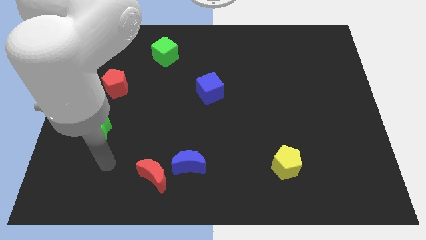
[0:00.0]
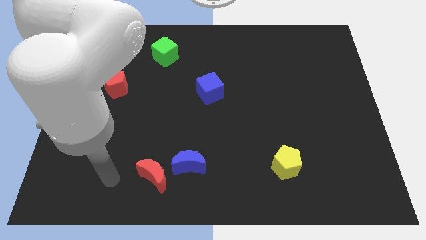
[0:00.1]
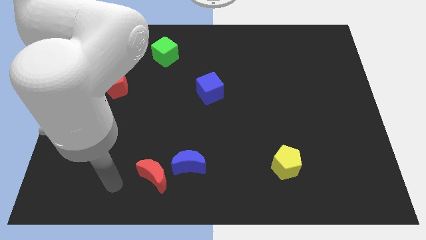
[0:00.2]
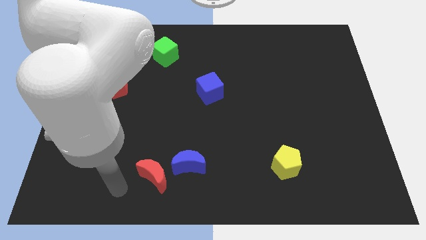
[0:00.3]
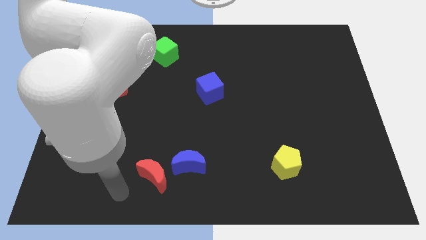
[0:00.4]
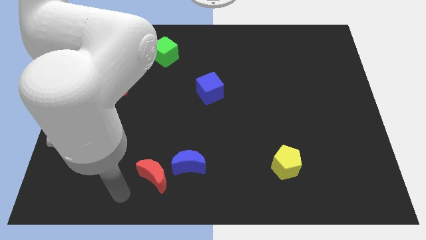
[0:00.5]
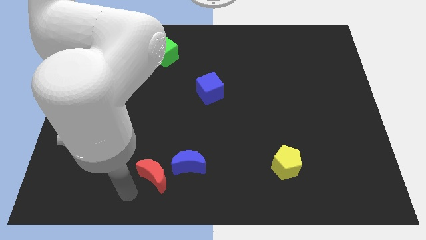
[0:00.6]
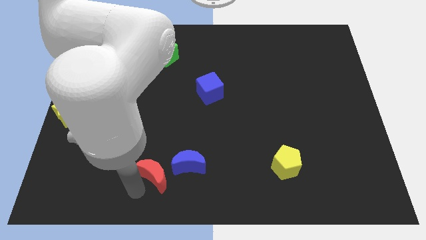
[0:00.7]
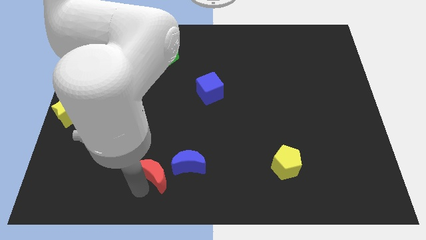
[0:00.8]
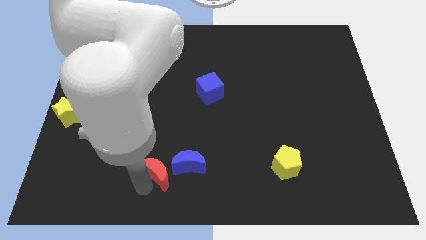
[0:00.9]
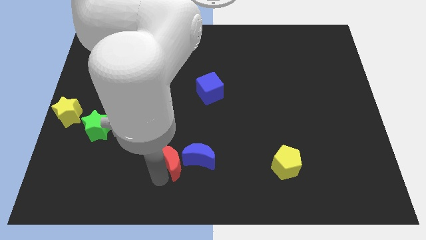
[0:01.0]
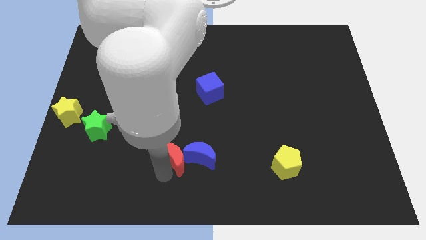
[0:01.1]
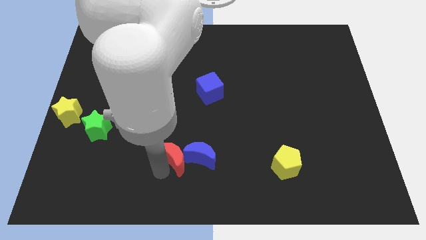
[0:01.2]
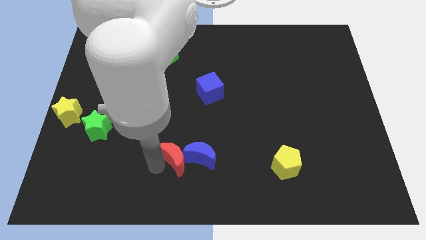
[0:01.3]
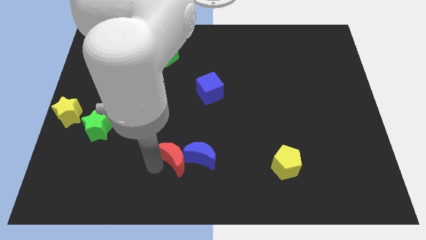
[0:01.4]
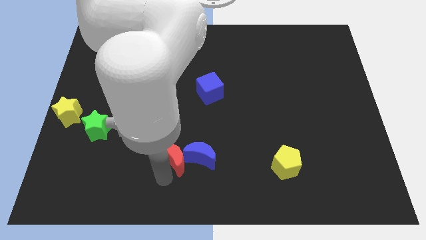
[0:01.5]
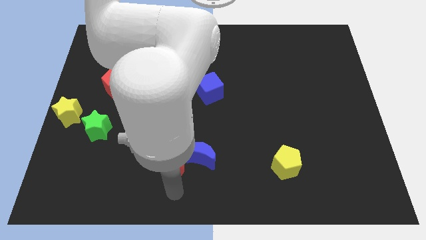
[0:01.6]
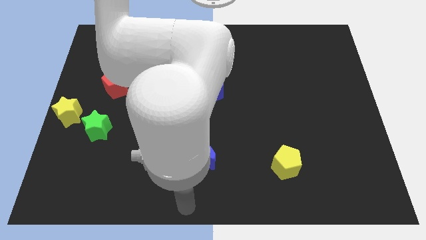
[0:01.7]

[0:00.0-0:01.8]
push the red moon into the blue moon

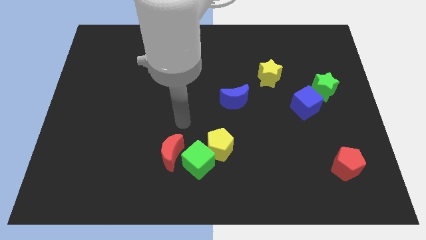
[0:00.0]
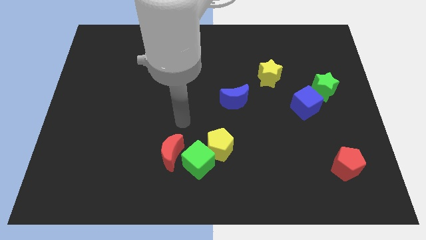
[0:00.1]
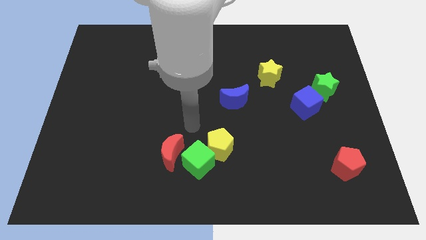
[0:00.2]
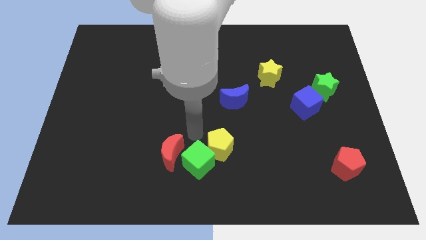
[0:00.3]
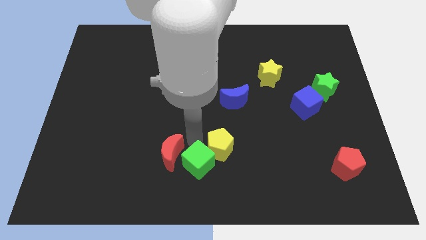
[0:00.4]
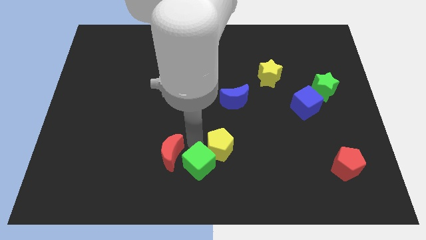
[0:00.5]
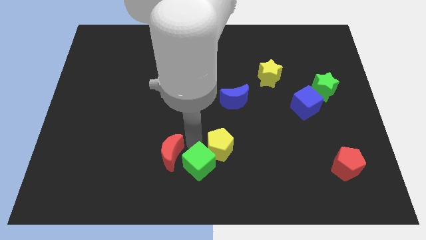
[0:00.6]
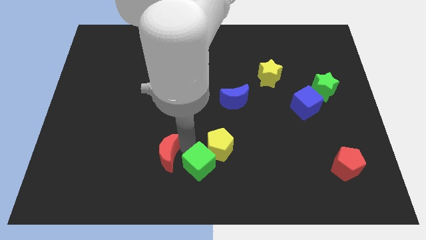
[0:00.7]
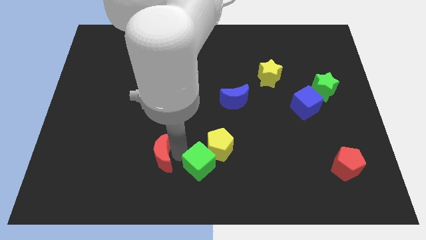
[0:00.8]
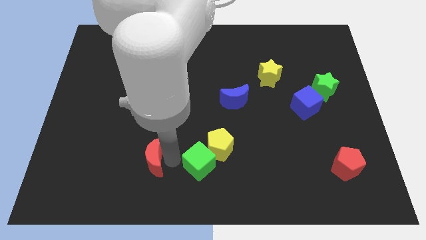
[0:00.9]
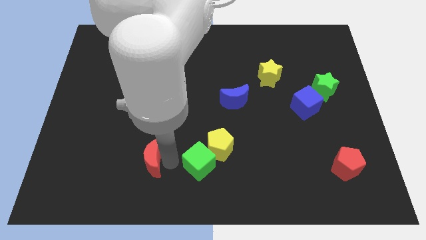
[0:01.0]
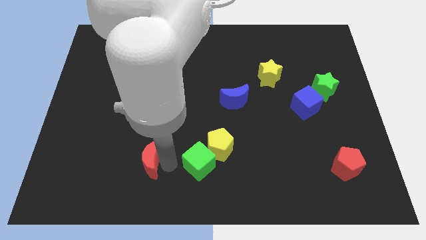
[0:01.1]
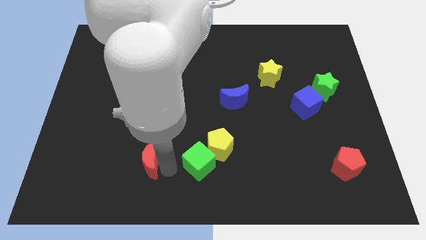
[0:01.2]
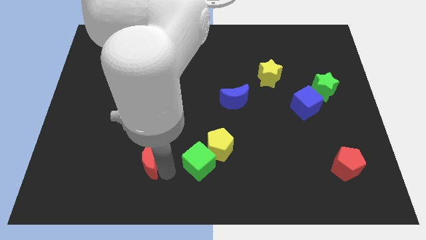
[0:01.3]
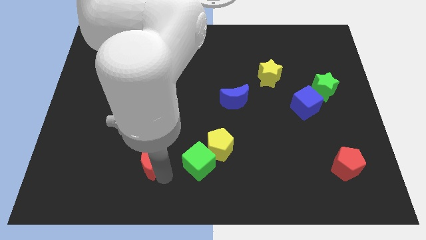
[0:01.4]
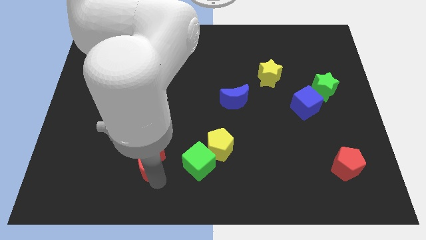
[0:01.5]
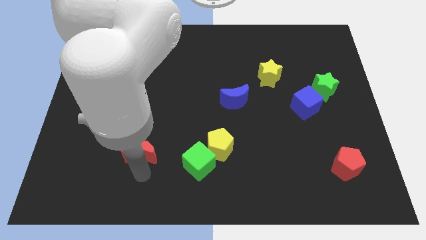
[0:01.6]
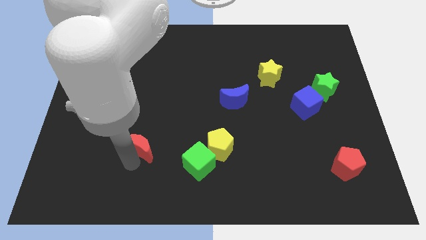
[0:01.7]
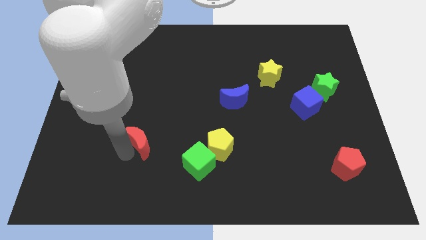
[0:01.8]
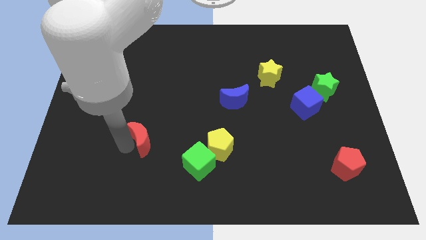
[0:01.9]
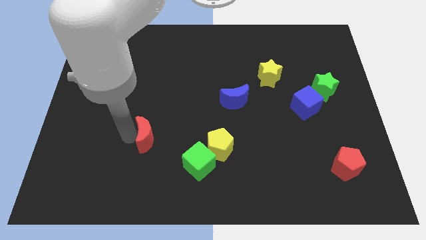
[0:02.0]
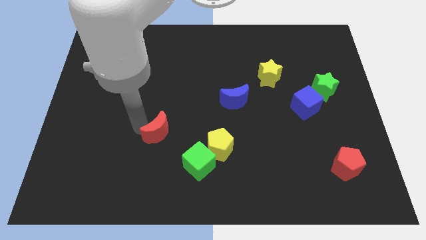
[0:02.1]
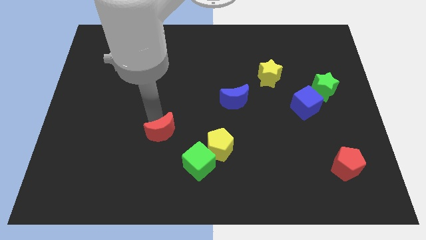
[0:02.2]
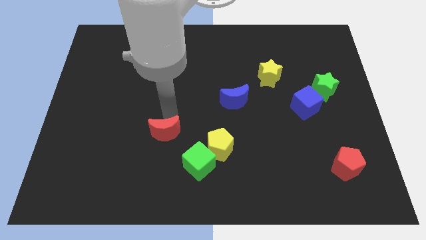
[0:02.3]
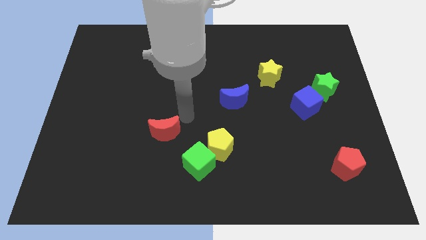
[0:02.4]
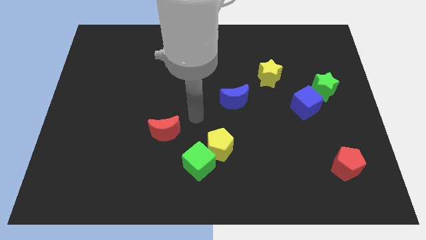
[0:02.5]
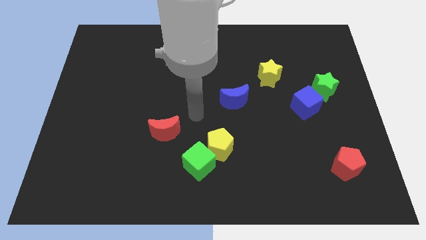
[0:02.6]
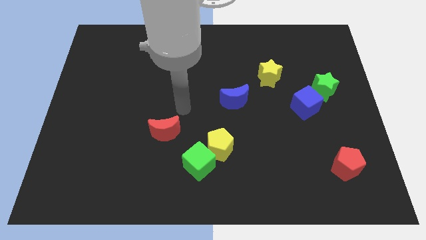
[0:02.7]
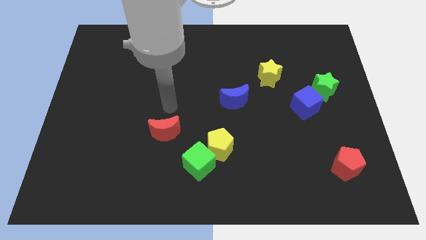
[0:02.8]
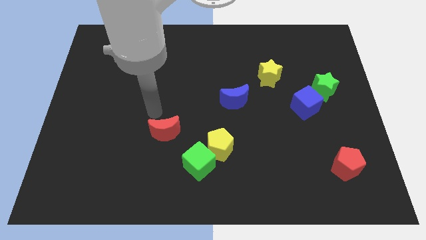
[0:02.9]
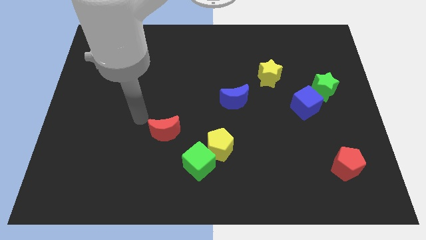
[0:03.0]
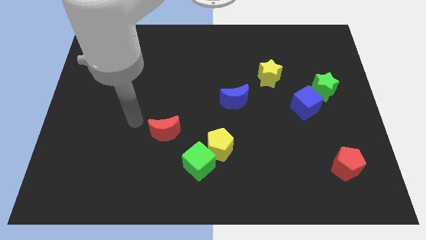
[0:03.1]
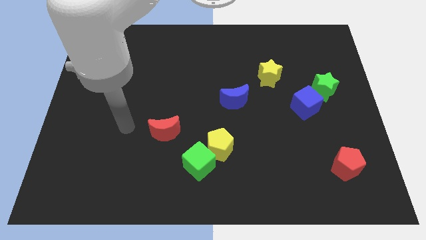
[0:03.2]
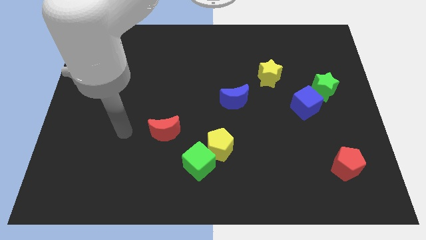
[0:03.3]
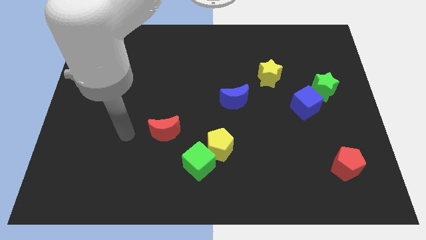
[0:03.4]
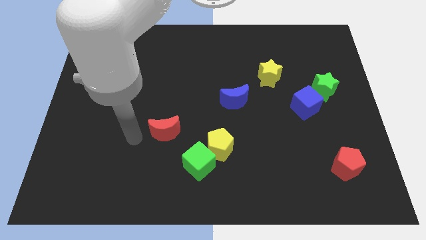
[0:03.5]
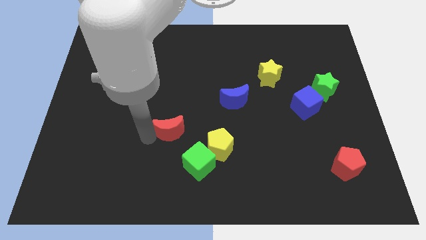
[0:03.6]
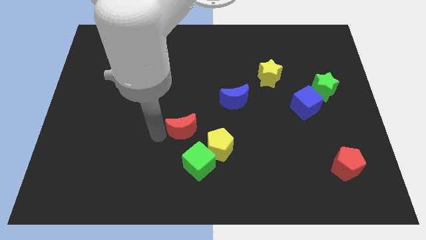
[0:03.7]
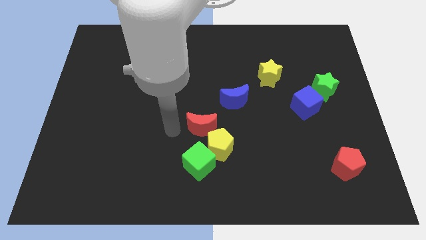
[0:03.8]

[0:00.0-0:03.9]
place the red crescent to the top of the yellow pentagon

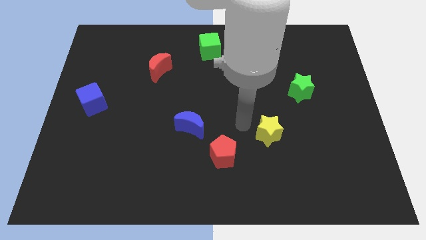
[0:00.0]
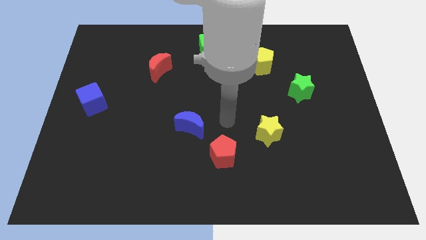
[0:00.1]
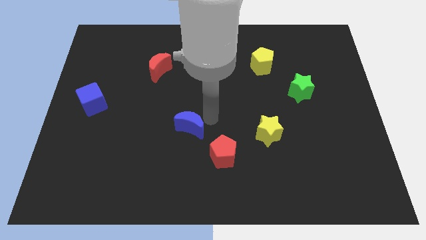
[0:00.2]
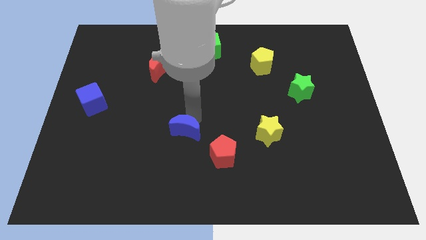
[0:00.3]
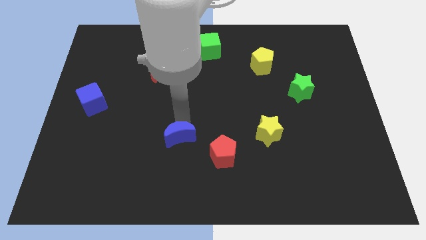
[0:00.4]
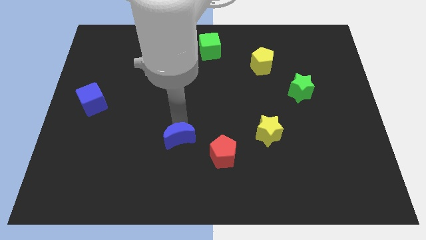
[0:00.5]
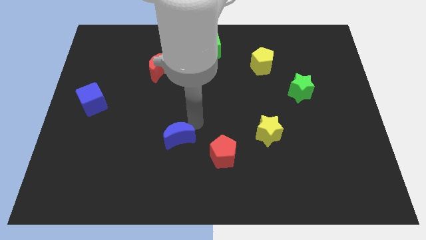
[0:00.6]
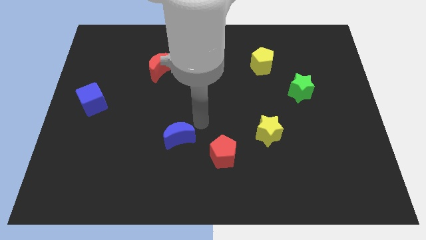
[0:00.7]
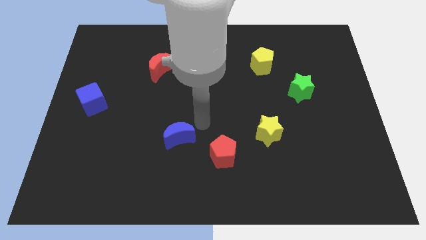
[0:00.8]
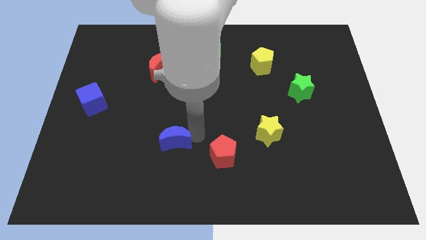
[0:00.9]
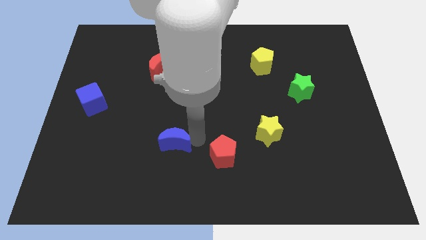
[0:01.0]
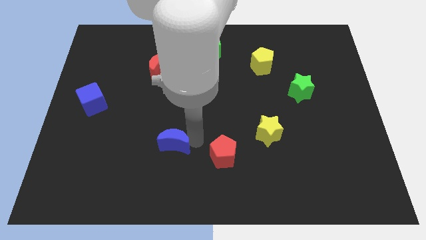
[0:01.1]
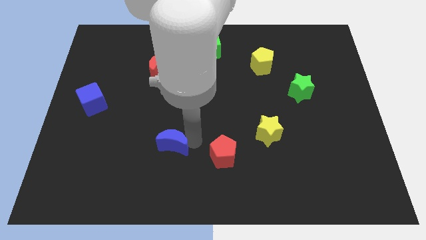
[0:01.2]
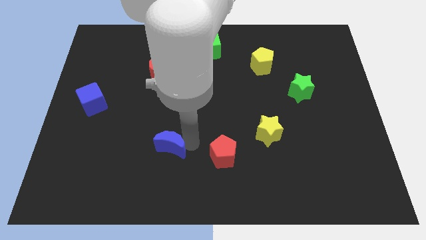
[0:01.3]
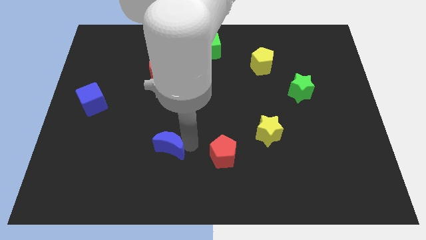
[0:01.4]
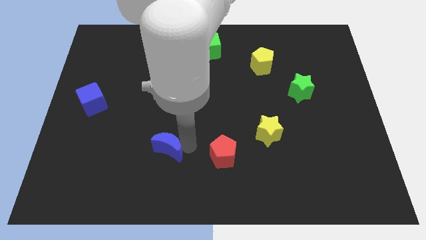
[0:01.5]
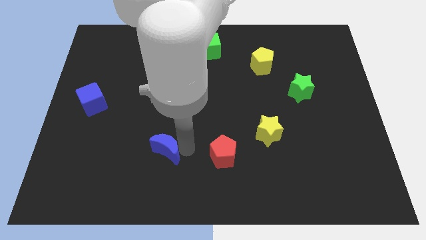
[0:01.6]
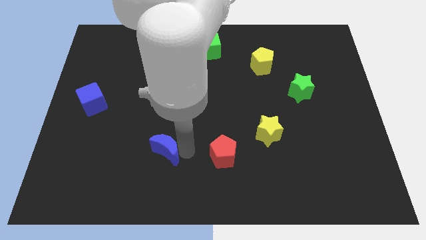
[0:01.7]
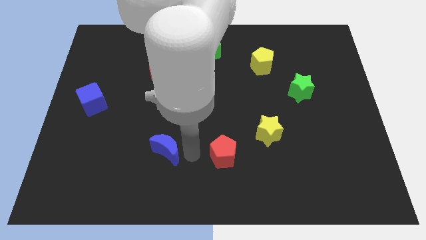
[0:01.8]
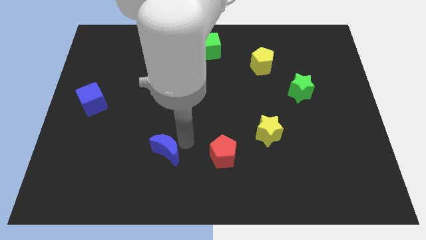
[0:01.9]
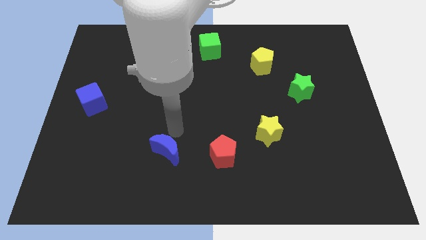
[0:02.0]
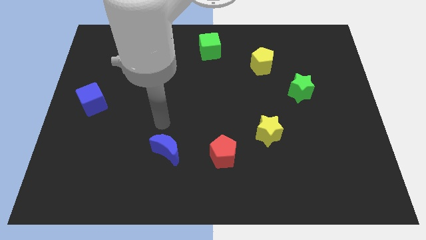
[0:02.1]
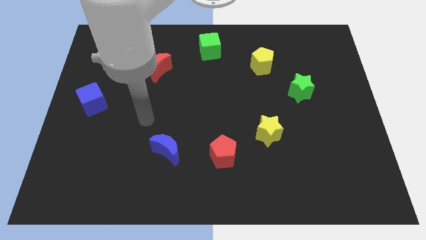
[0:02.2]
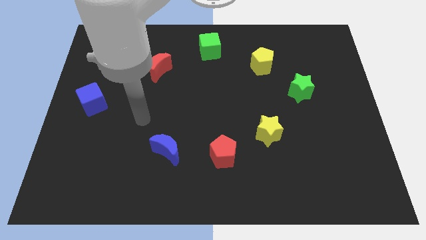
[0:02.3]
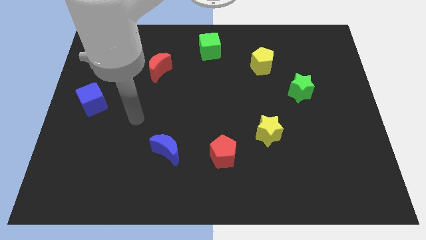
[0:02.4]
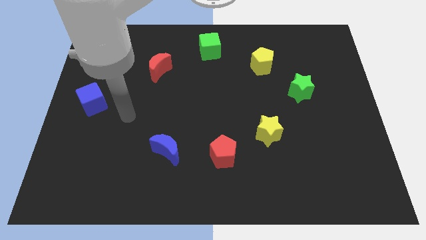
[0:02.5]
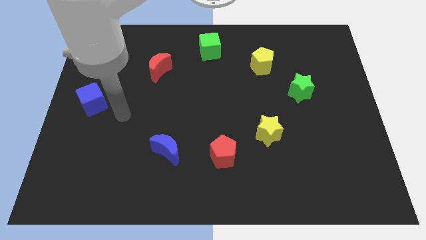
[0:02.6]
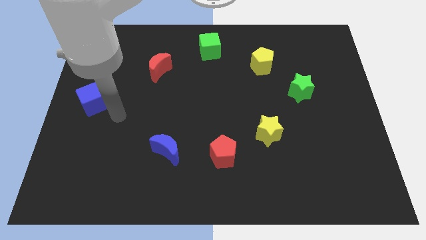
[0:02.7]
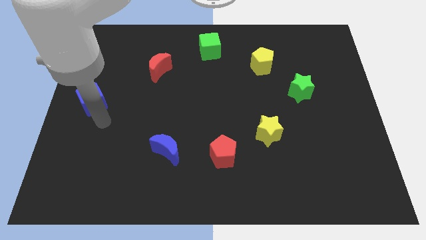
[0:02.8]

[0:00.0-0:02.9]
place the blue moon below the red moon
